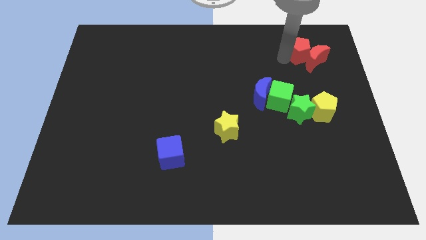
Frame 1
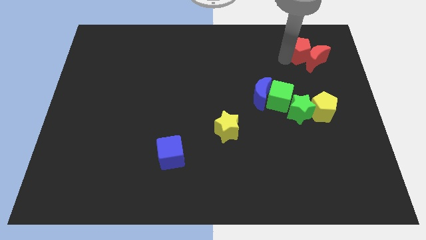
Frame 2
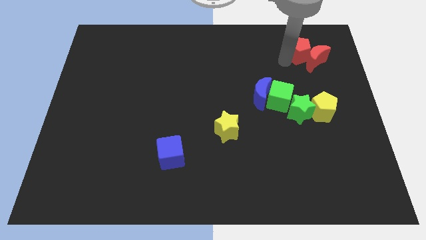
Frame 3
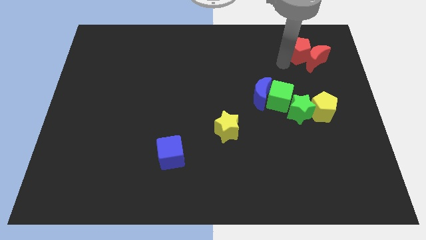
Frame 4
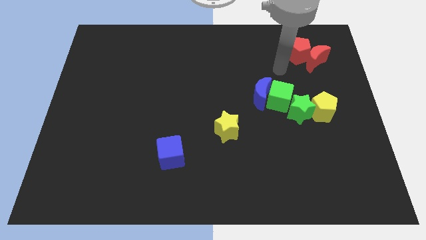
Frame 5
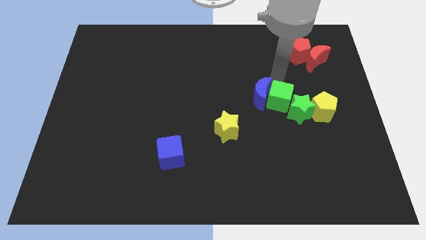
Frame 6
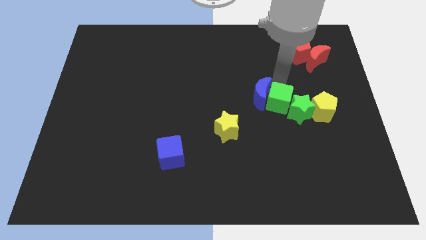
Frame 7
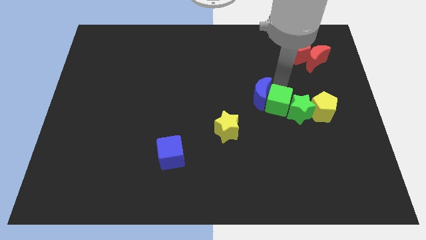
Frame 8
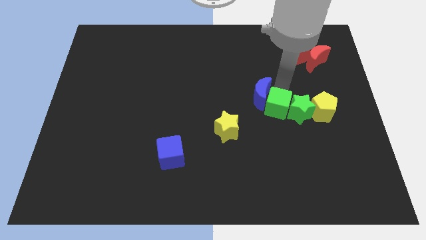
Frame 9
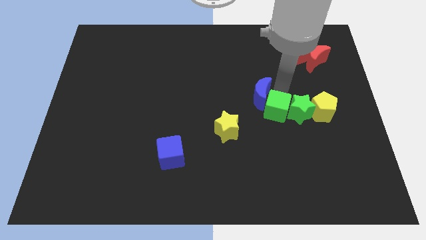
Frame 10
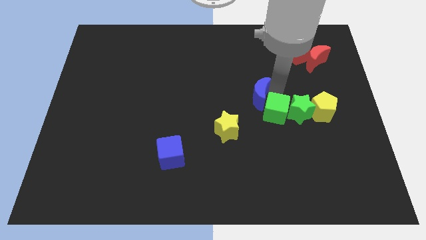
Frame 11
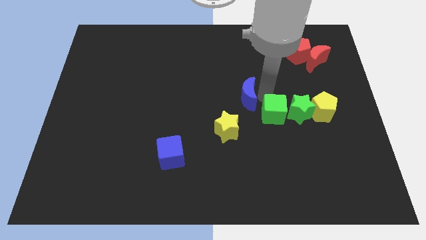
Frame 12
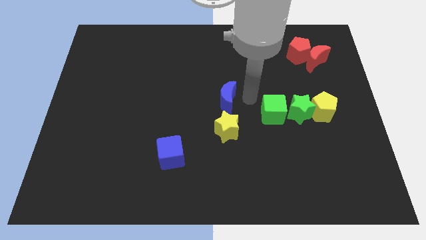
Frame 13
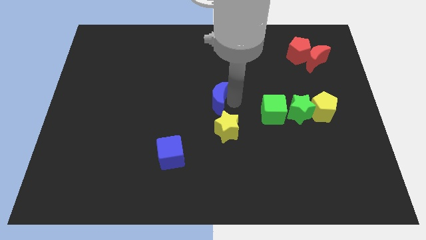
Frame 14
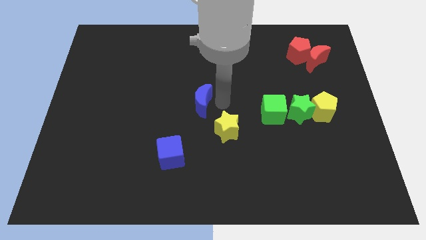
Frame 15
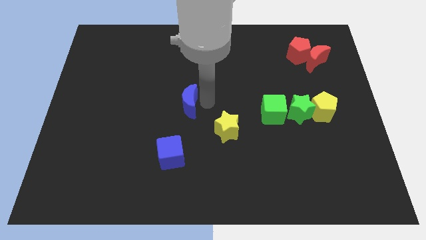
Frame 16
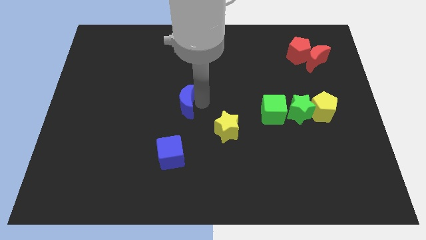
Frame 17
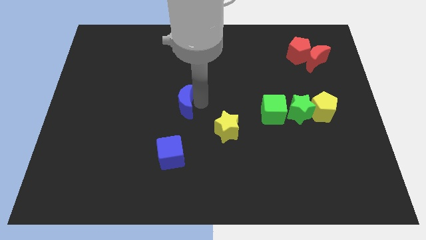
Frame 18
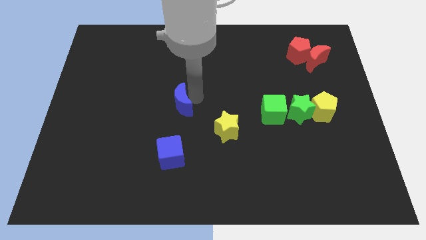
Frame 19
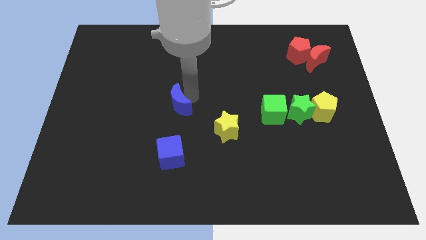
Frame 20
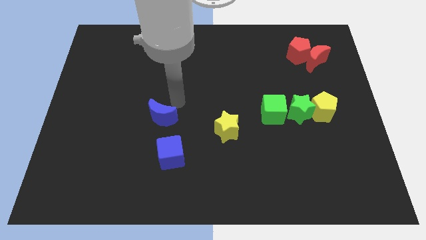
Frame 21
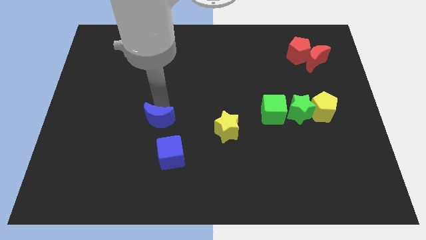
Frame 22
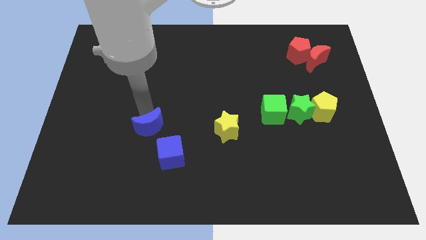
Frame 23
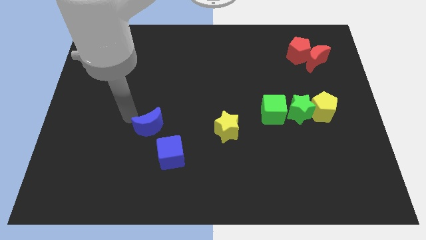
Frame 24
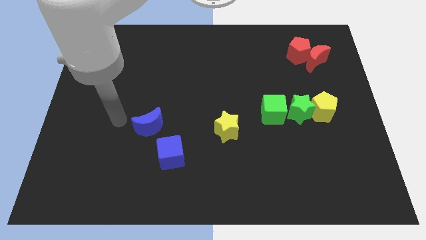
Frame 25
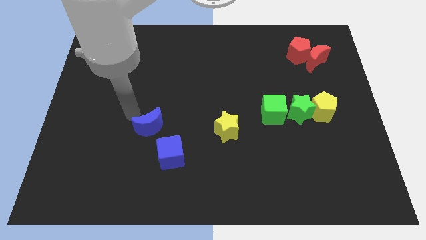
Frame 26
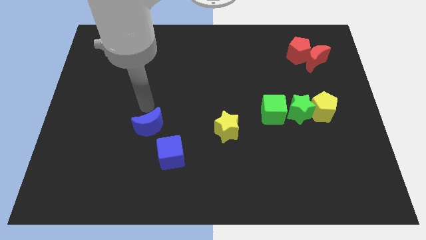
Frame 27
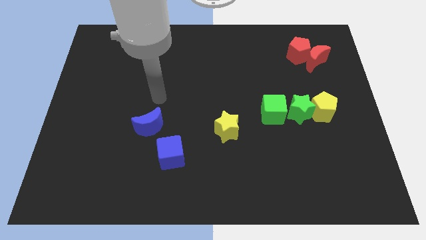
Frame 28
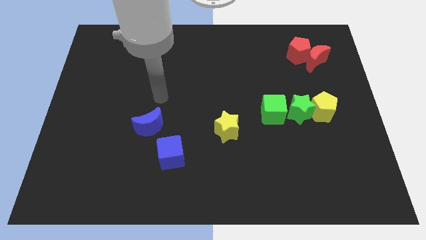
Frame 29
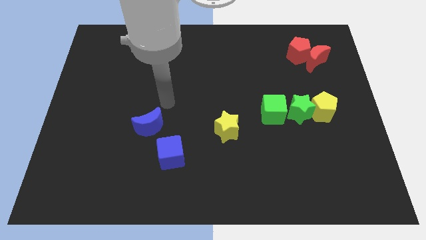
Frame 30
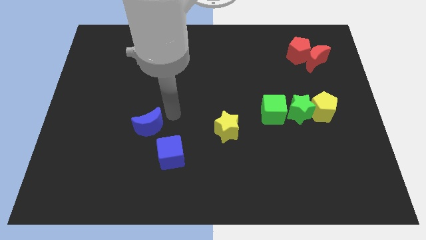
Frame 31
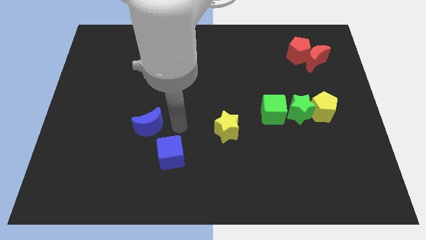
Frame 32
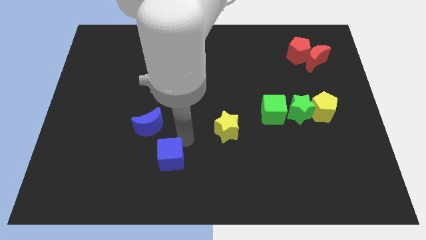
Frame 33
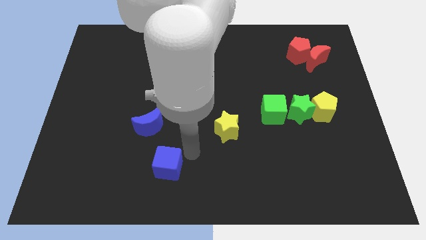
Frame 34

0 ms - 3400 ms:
place the blue crescent to the left yellow star

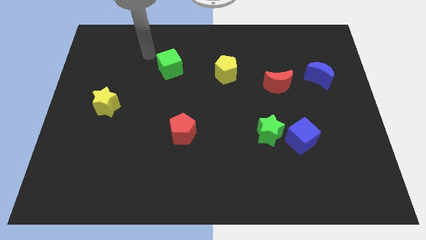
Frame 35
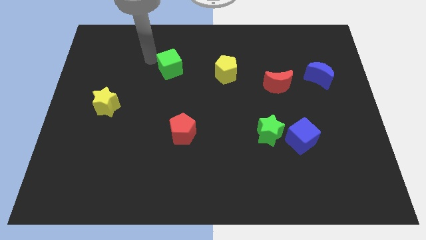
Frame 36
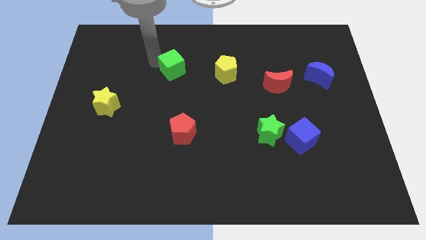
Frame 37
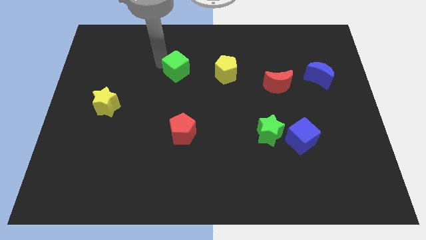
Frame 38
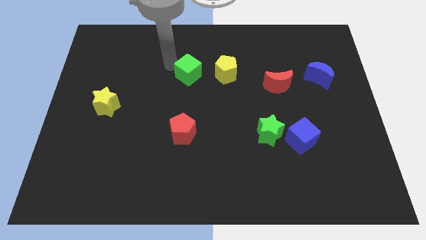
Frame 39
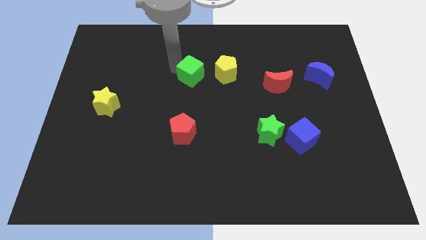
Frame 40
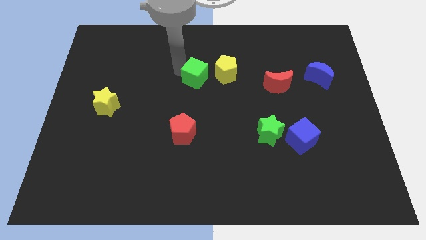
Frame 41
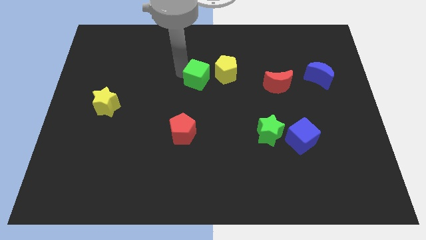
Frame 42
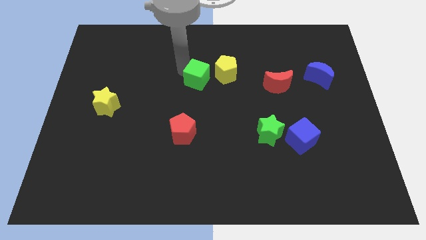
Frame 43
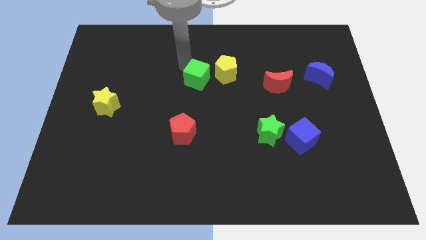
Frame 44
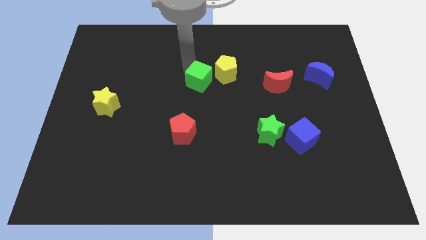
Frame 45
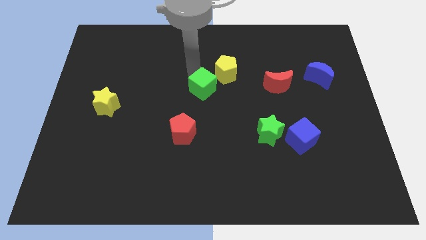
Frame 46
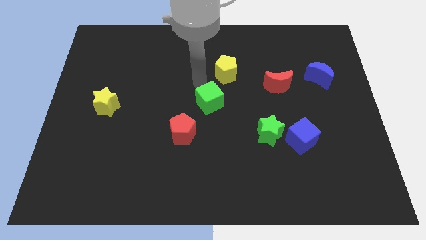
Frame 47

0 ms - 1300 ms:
push the green cube close to the yellow pentagon

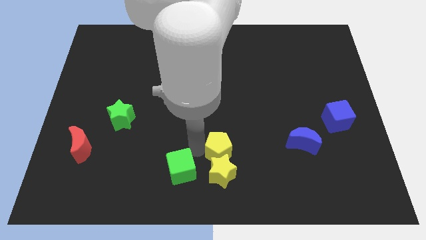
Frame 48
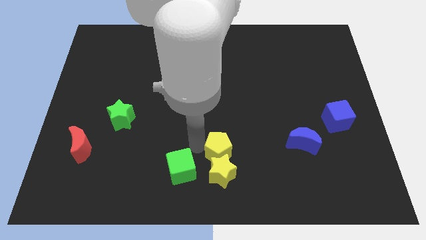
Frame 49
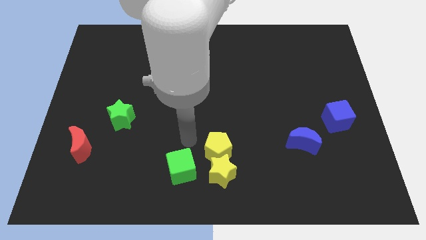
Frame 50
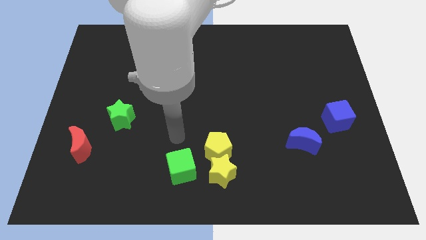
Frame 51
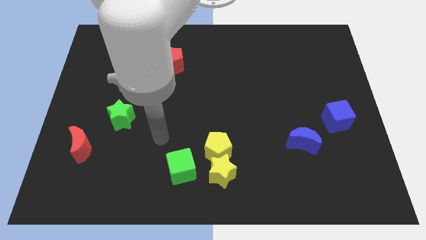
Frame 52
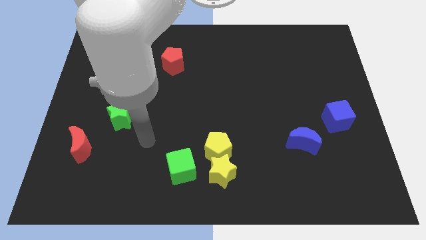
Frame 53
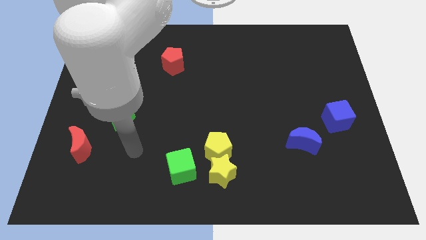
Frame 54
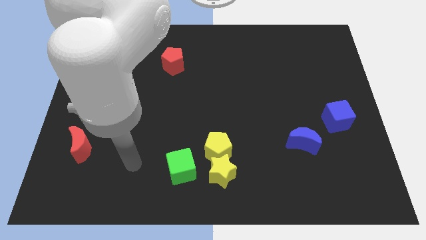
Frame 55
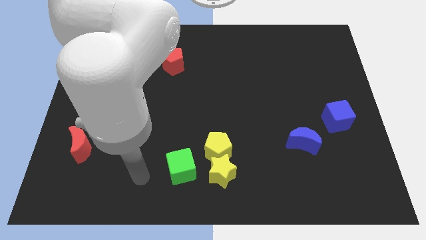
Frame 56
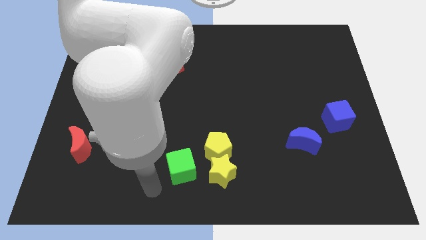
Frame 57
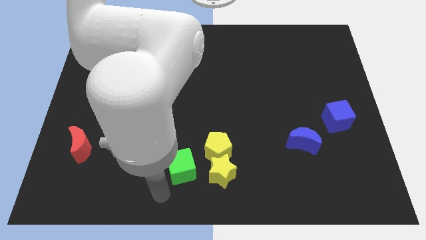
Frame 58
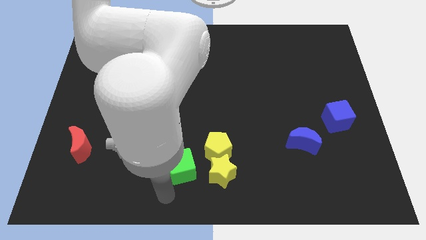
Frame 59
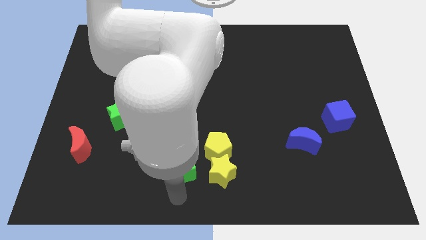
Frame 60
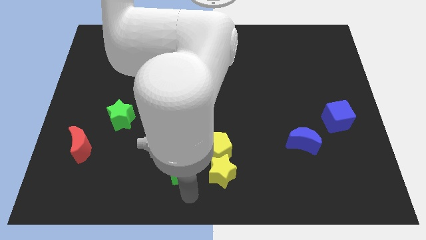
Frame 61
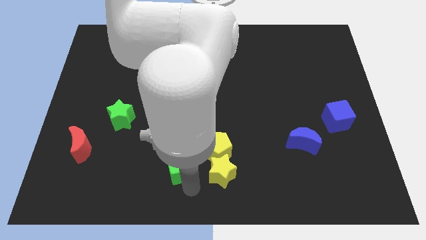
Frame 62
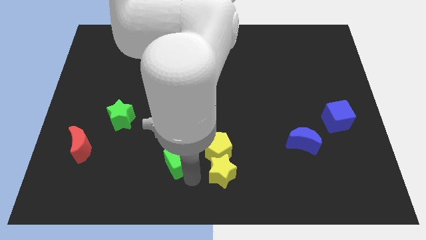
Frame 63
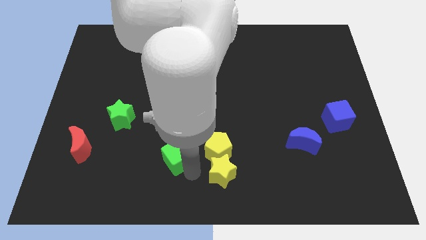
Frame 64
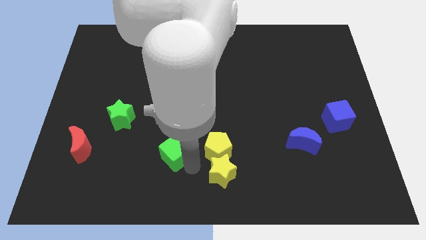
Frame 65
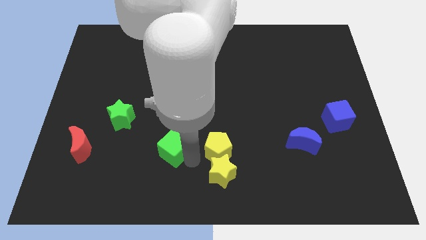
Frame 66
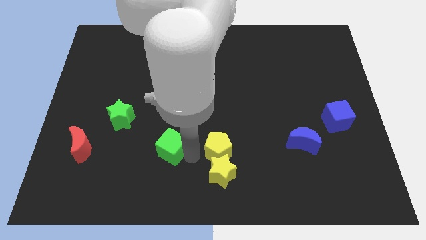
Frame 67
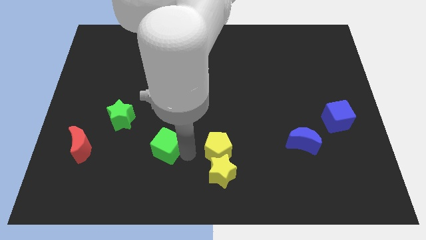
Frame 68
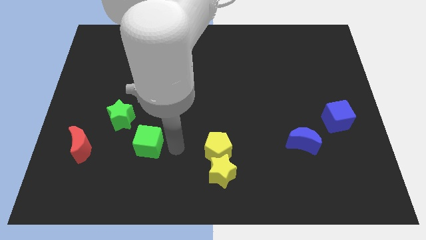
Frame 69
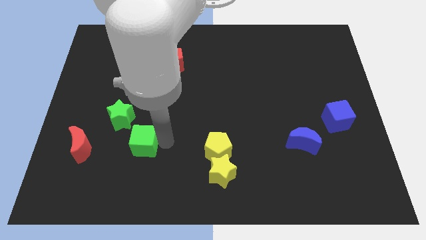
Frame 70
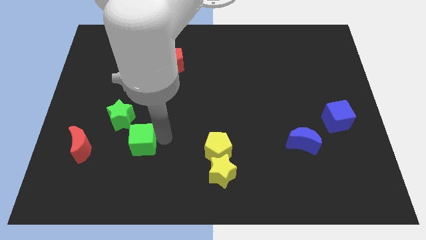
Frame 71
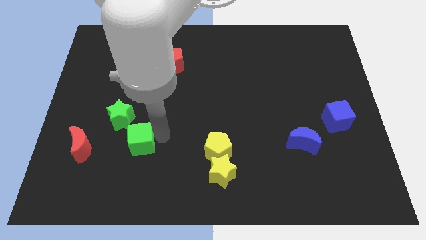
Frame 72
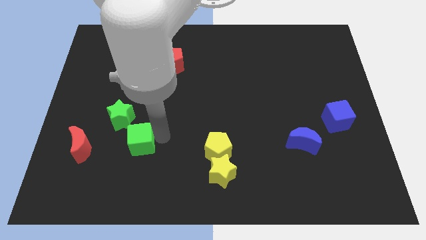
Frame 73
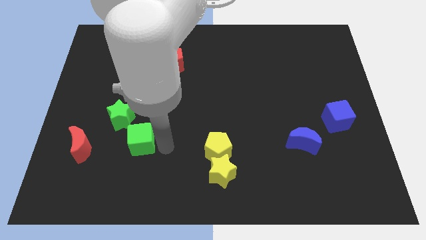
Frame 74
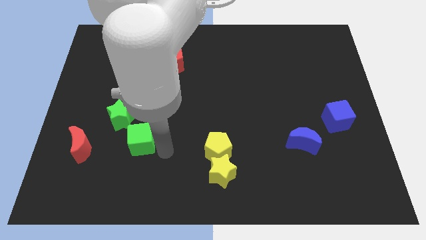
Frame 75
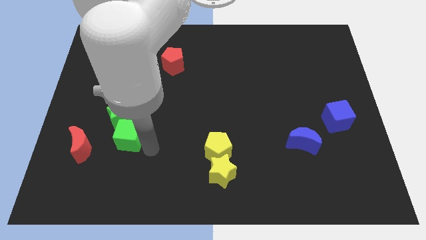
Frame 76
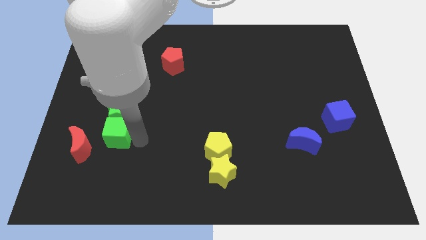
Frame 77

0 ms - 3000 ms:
move the green cube to the bottom side of the green star

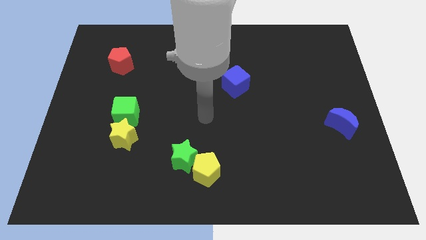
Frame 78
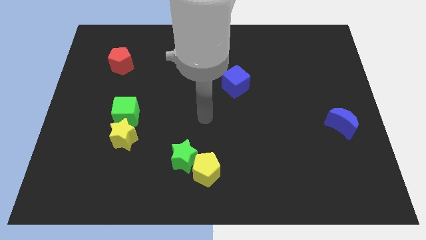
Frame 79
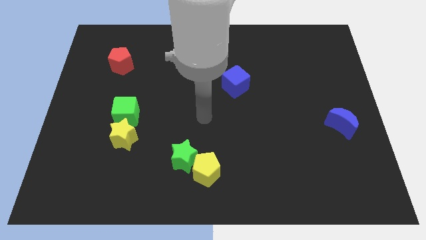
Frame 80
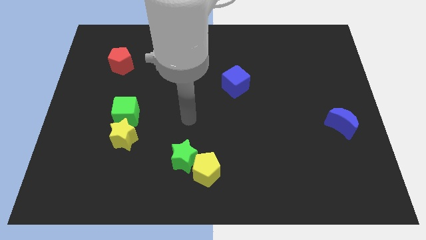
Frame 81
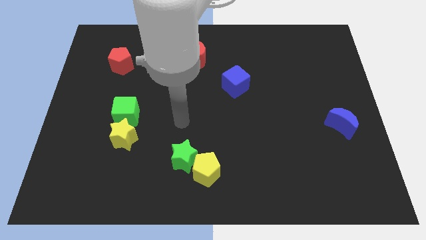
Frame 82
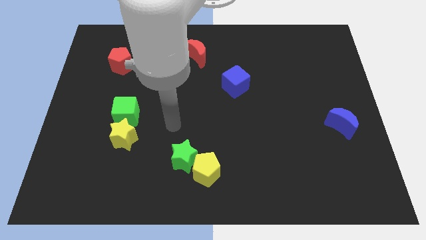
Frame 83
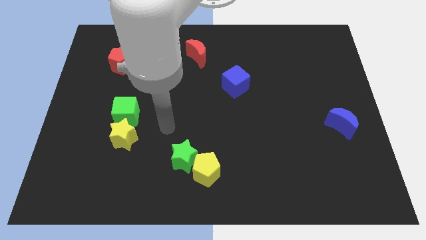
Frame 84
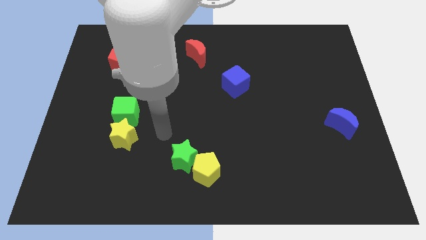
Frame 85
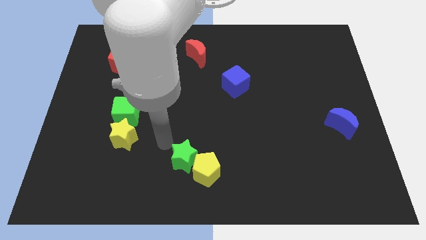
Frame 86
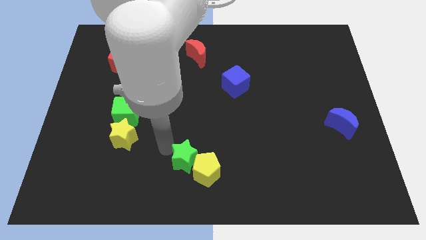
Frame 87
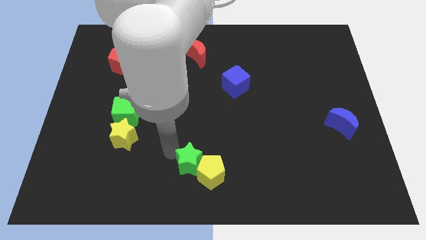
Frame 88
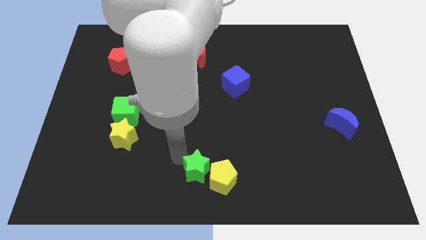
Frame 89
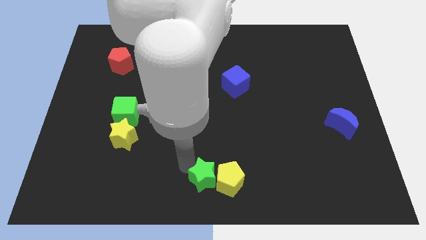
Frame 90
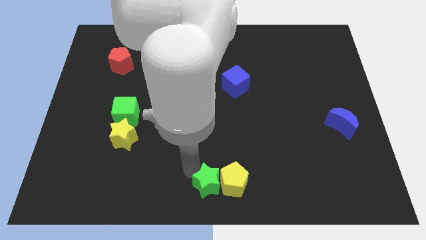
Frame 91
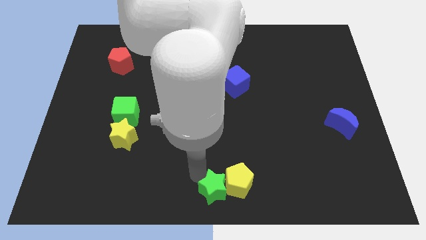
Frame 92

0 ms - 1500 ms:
push the yellow pentagon with the green star
